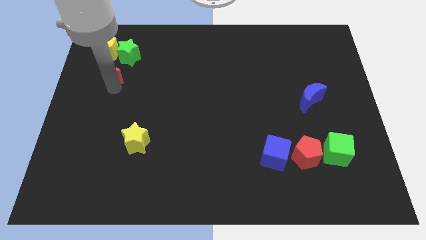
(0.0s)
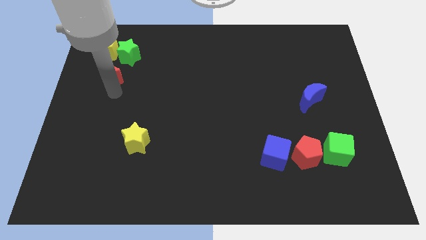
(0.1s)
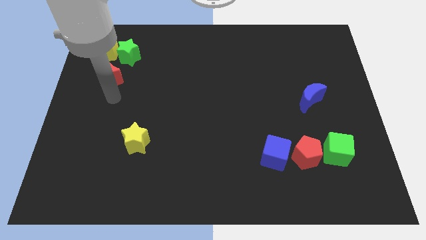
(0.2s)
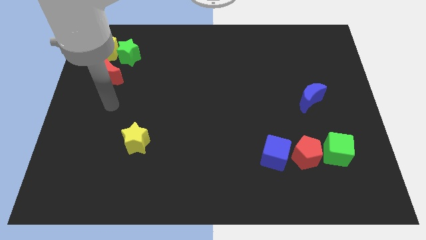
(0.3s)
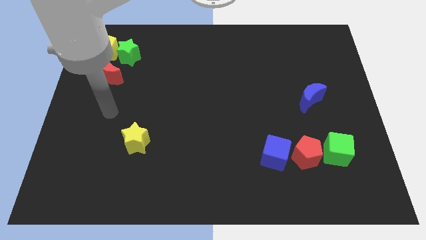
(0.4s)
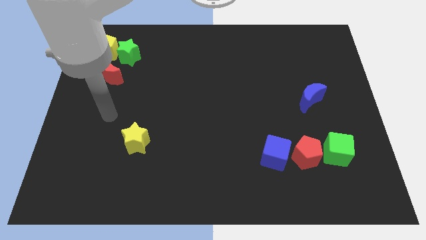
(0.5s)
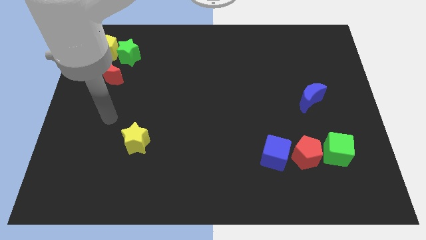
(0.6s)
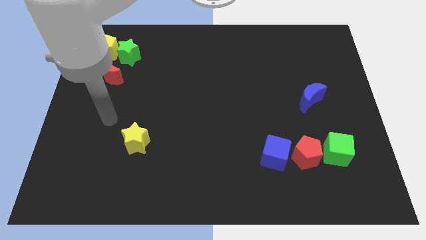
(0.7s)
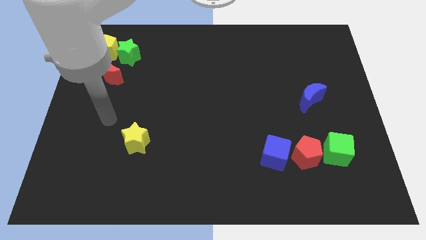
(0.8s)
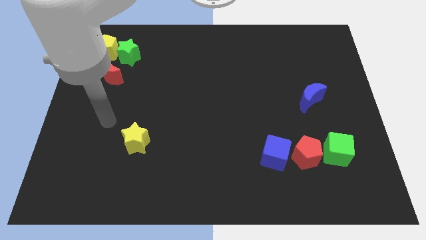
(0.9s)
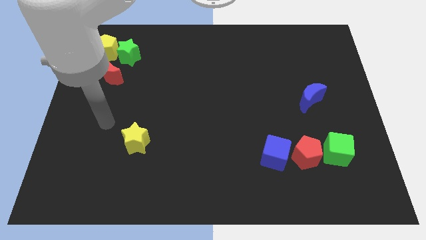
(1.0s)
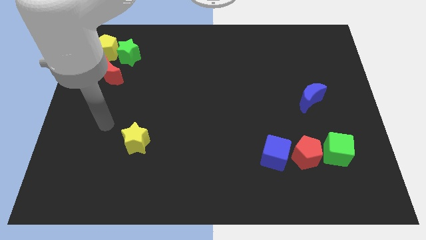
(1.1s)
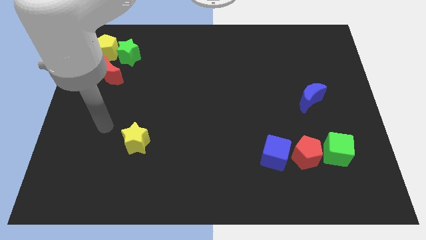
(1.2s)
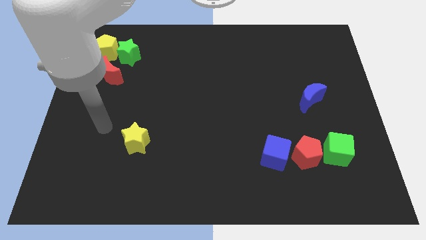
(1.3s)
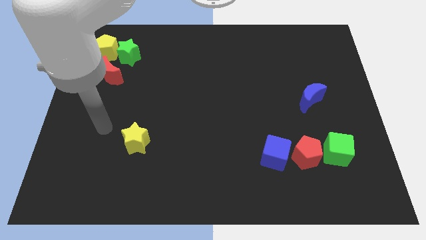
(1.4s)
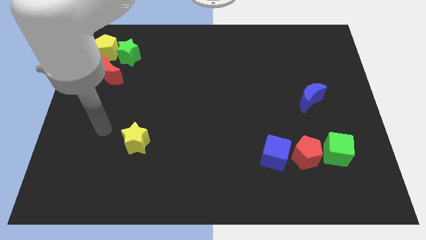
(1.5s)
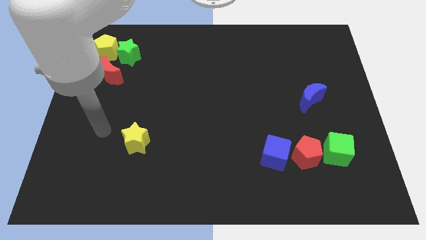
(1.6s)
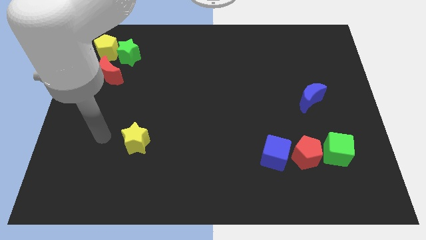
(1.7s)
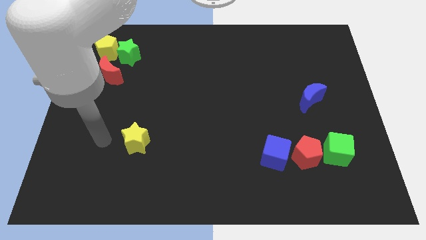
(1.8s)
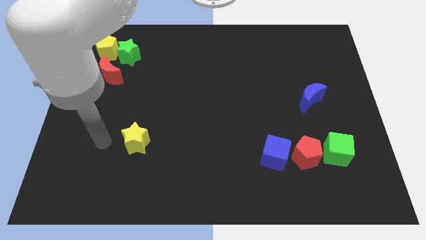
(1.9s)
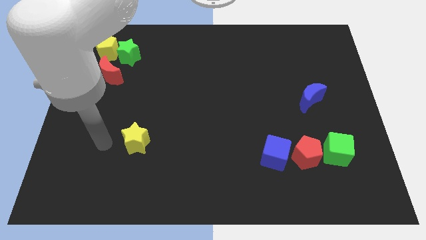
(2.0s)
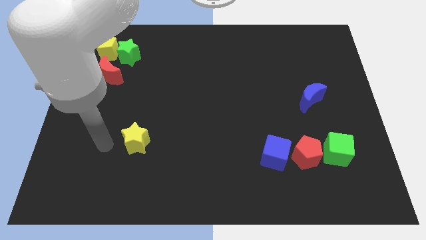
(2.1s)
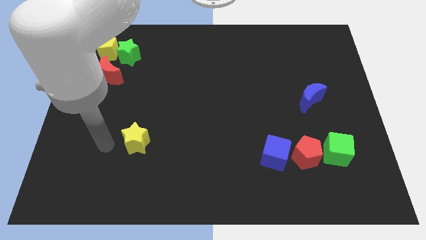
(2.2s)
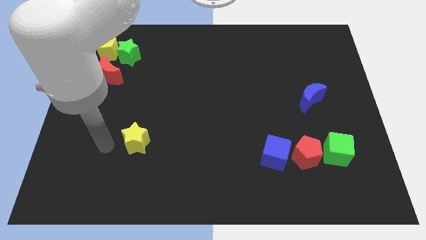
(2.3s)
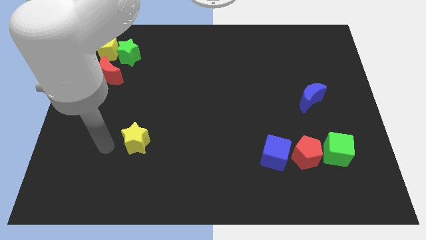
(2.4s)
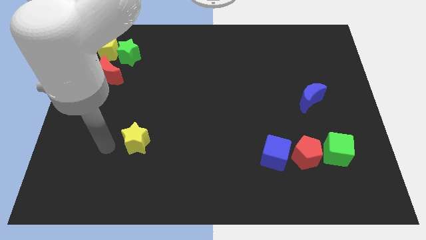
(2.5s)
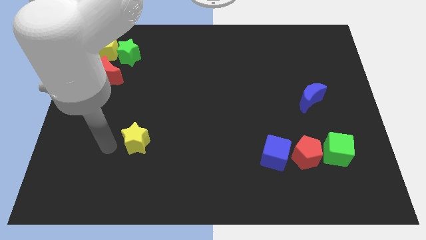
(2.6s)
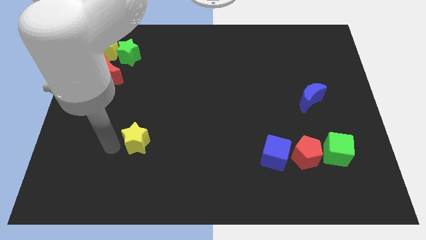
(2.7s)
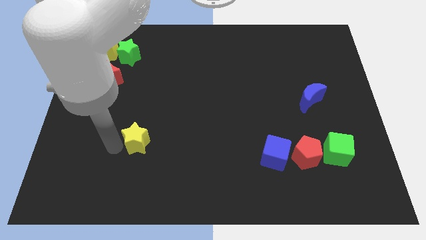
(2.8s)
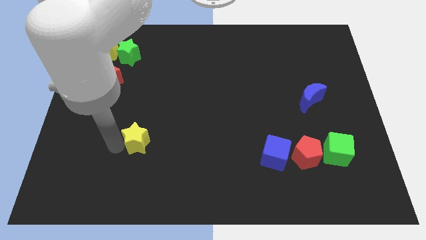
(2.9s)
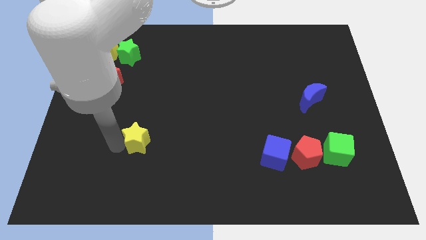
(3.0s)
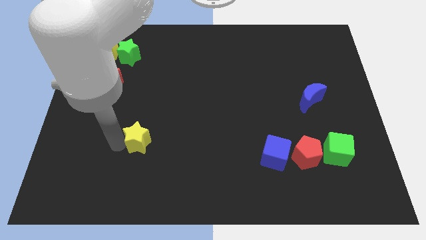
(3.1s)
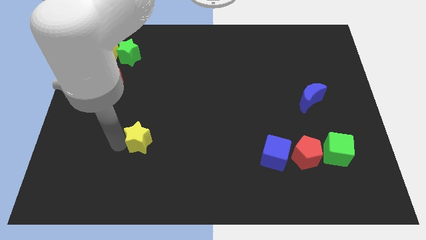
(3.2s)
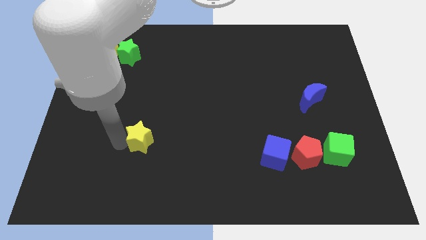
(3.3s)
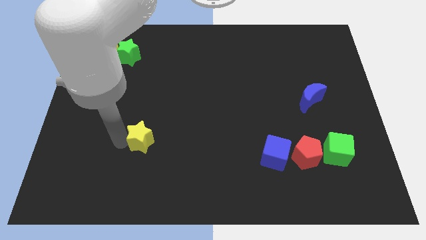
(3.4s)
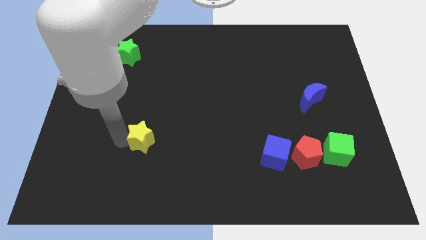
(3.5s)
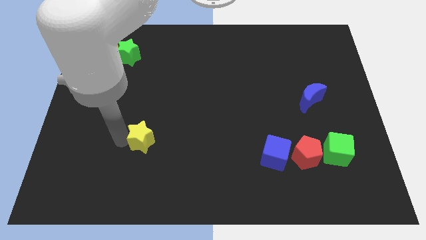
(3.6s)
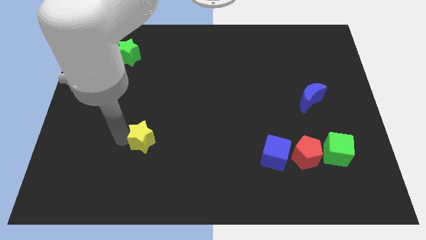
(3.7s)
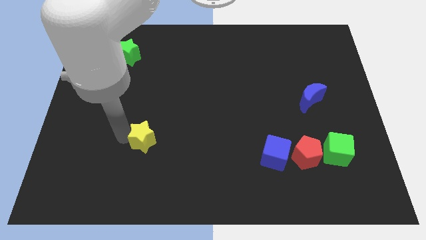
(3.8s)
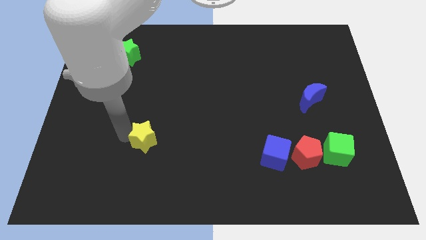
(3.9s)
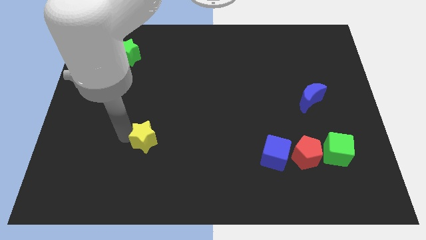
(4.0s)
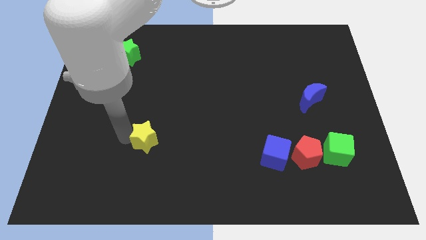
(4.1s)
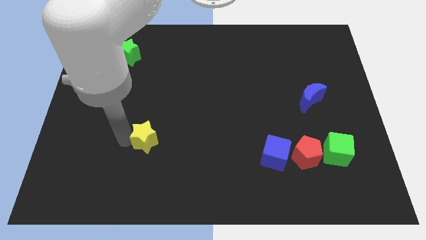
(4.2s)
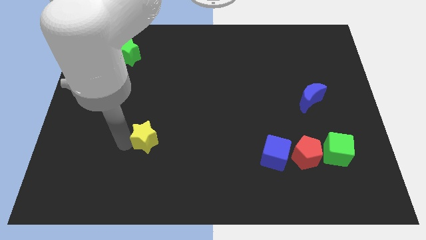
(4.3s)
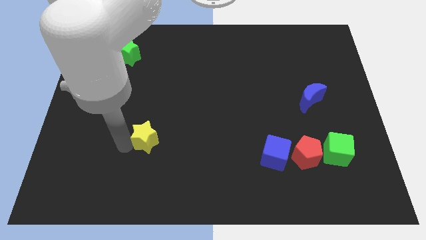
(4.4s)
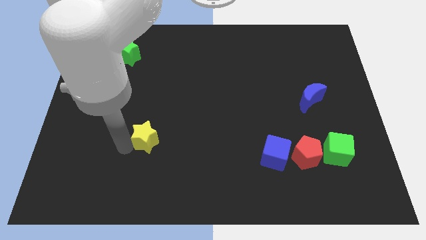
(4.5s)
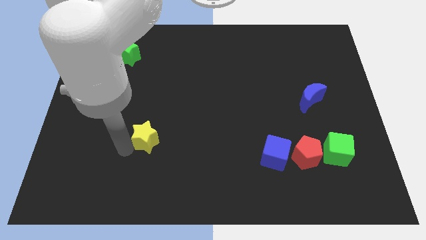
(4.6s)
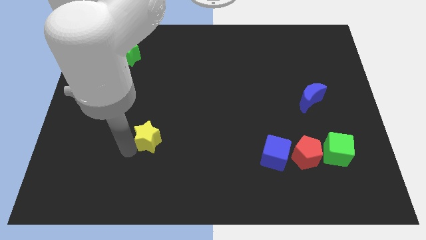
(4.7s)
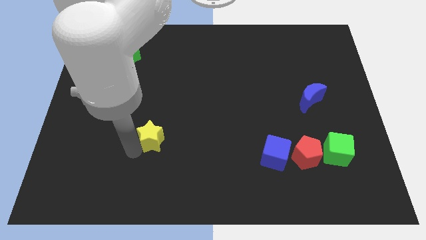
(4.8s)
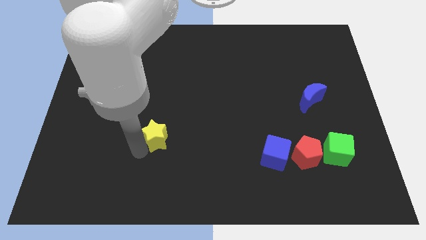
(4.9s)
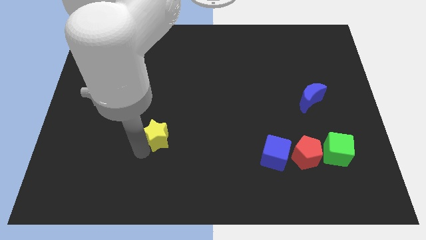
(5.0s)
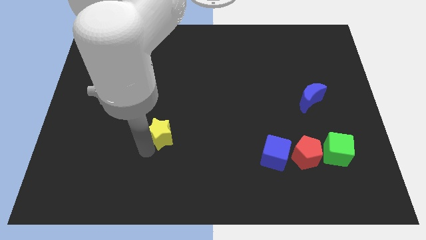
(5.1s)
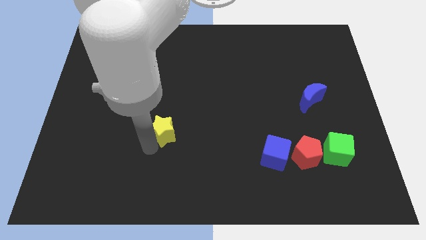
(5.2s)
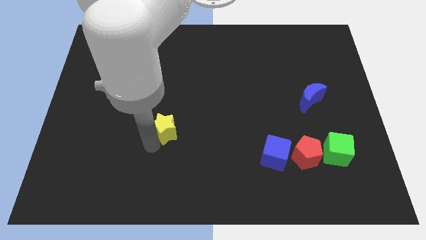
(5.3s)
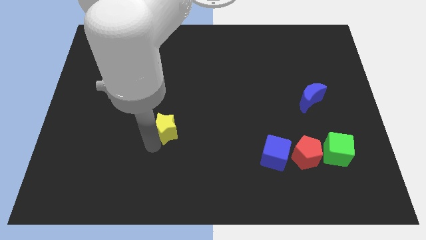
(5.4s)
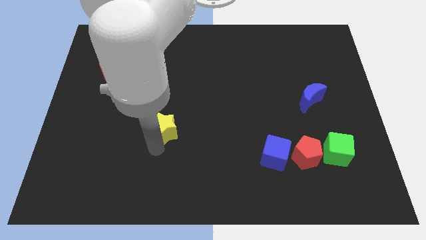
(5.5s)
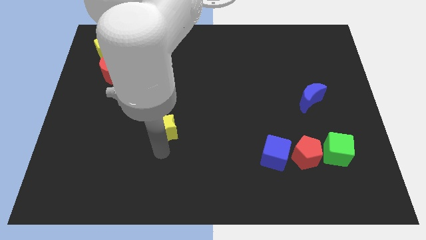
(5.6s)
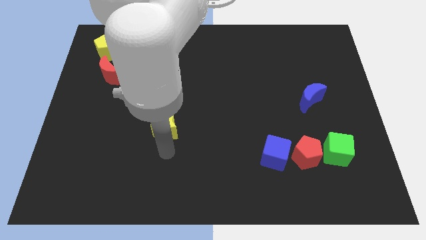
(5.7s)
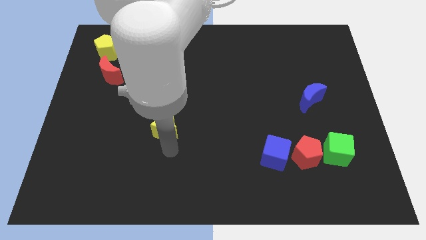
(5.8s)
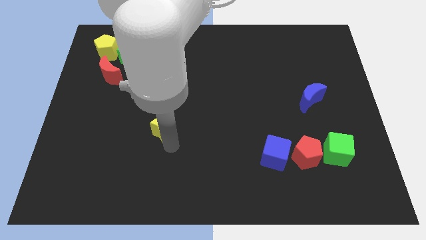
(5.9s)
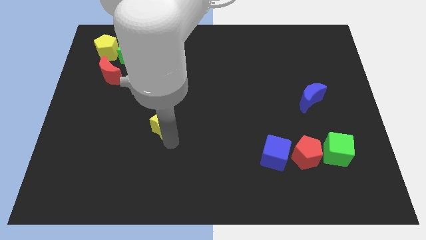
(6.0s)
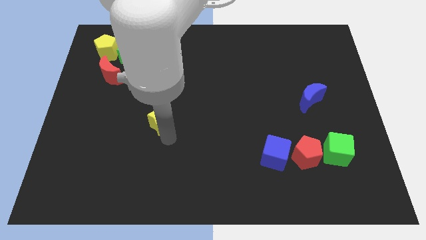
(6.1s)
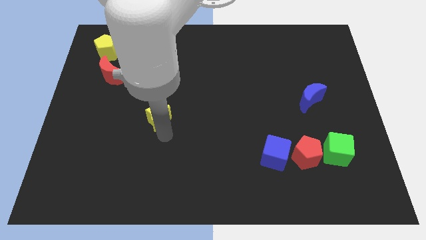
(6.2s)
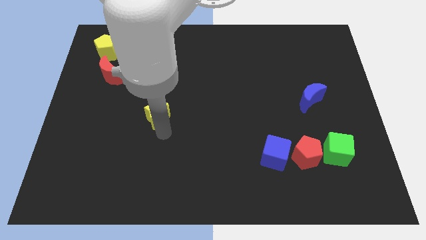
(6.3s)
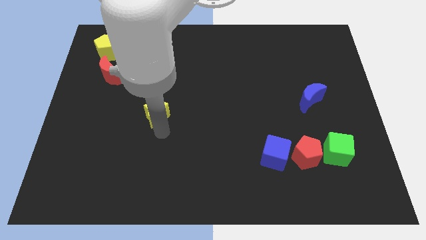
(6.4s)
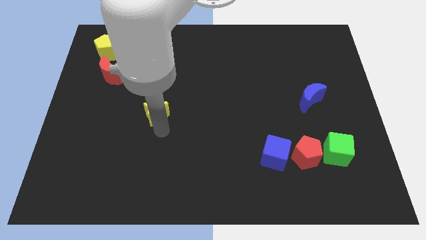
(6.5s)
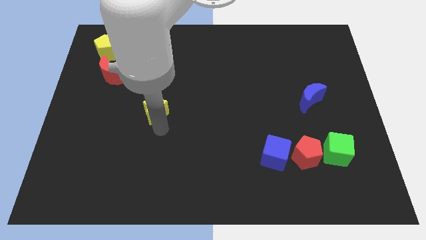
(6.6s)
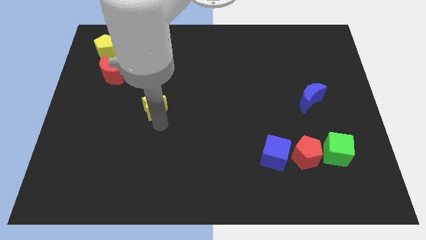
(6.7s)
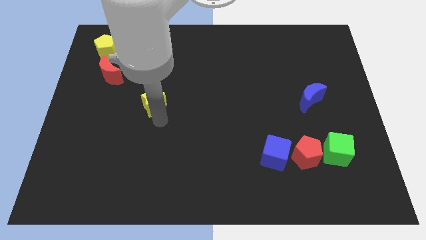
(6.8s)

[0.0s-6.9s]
push the yellow star upward

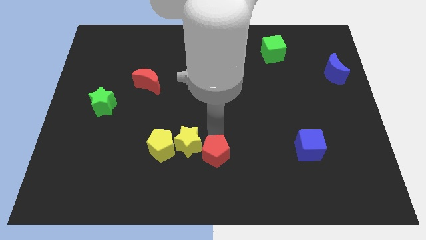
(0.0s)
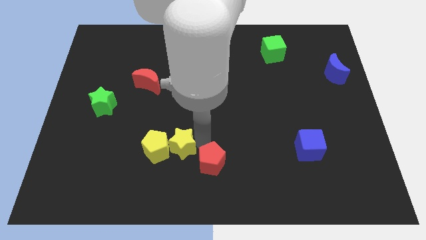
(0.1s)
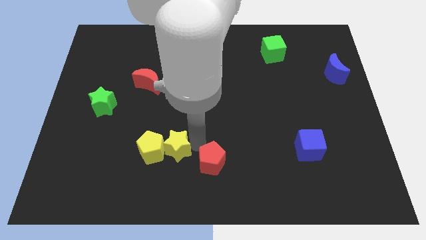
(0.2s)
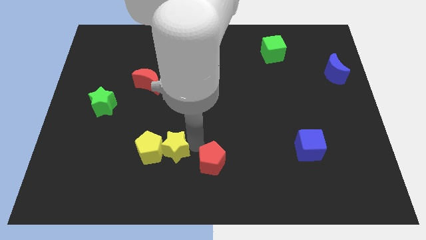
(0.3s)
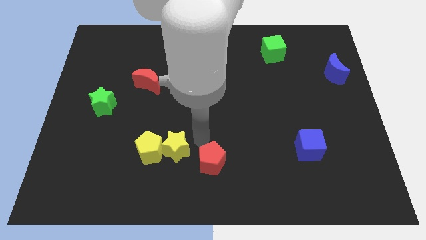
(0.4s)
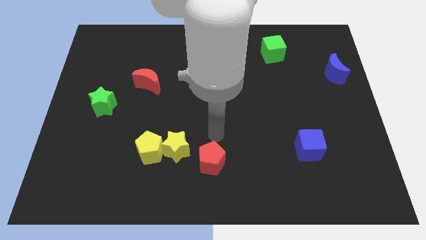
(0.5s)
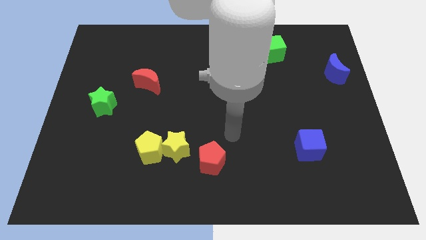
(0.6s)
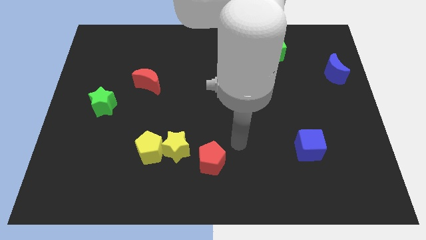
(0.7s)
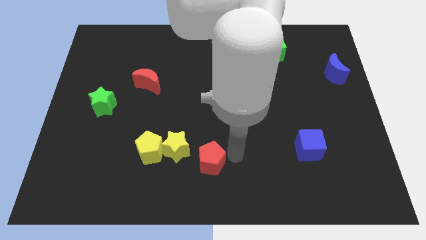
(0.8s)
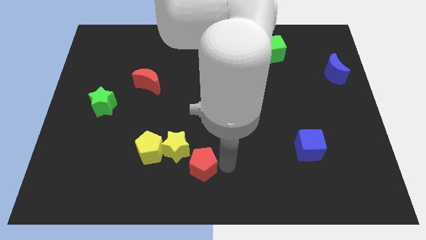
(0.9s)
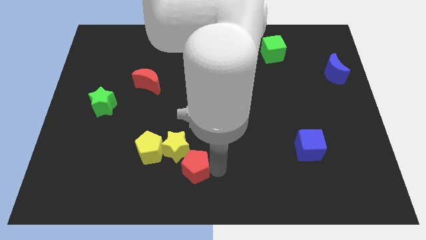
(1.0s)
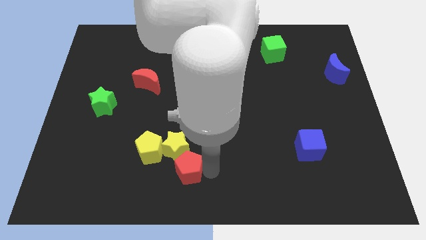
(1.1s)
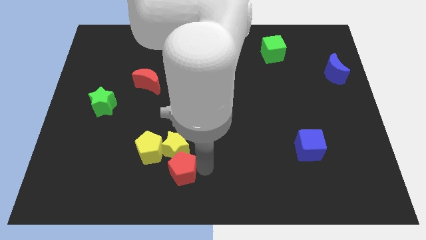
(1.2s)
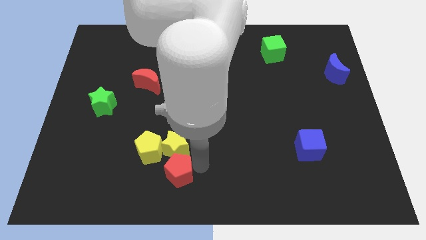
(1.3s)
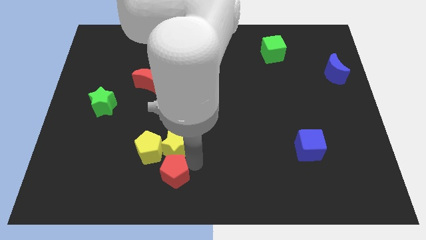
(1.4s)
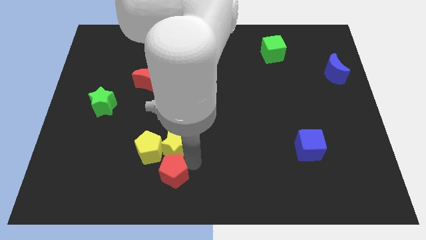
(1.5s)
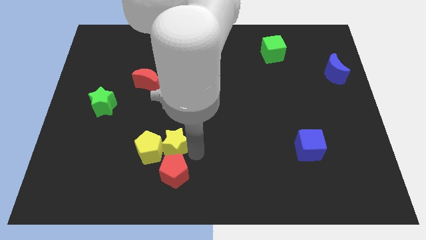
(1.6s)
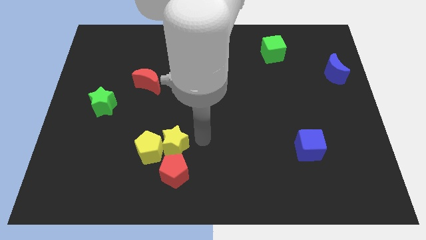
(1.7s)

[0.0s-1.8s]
place red pentagon close to yellow star and pentagon

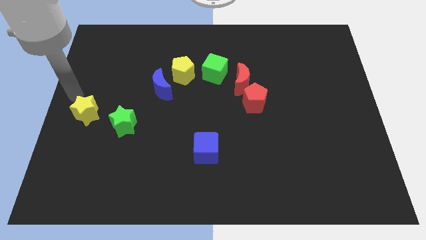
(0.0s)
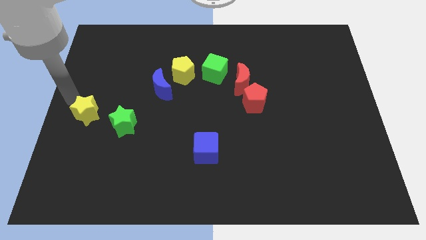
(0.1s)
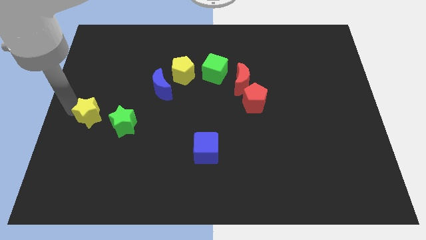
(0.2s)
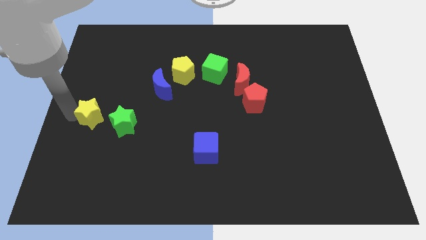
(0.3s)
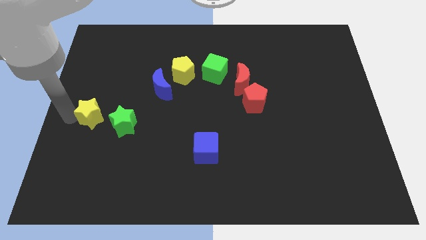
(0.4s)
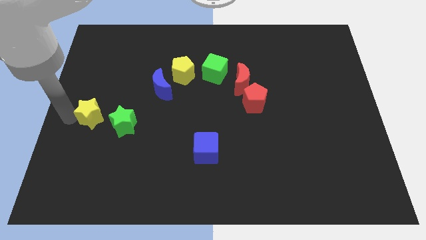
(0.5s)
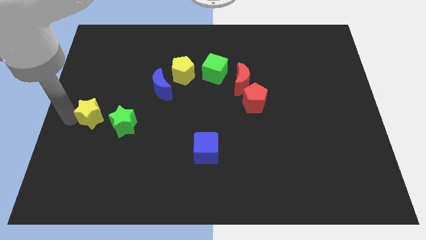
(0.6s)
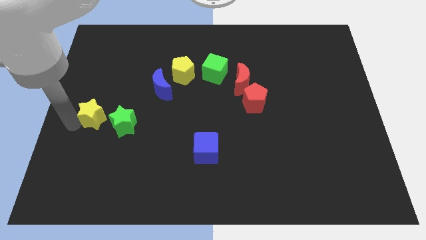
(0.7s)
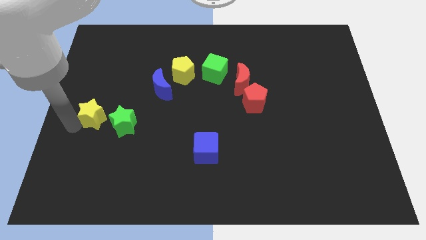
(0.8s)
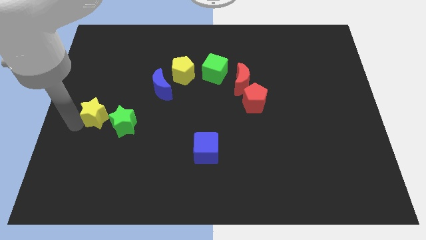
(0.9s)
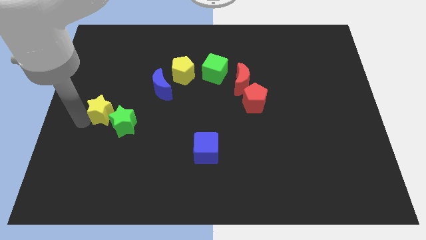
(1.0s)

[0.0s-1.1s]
move the yellow star close to the green star
